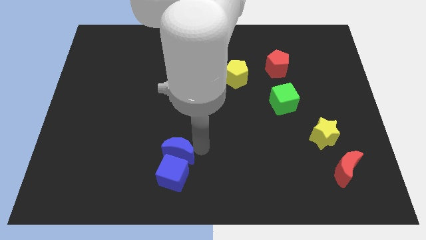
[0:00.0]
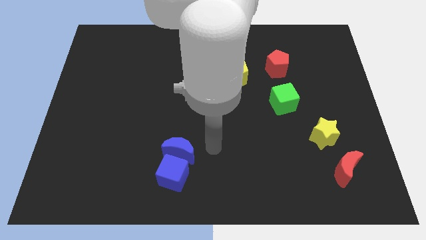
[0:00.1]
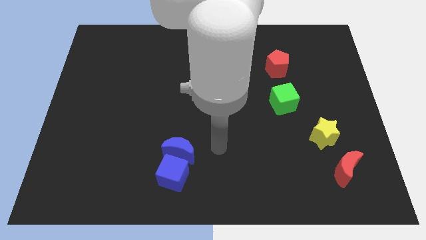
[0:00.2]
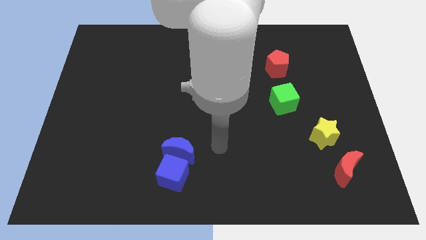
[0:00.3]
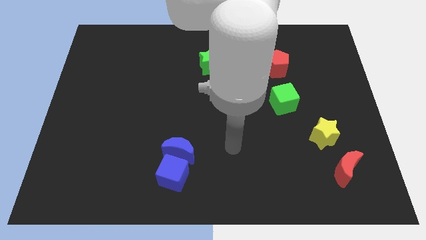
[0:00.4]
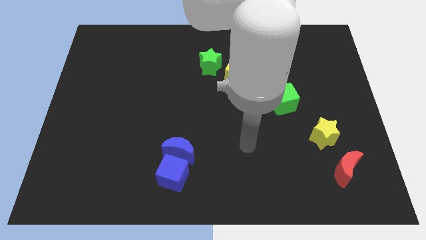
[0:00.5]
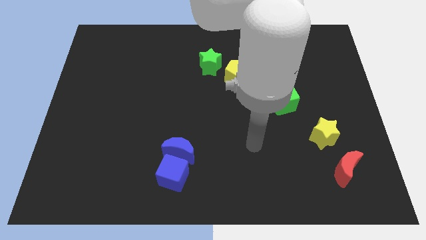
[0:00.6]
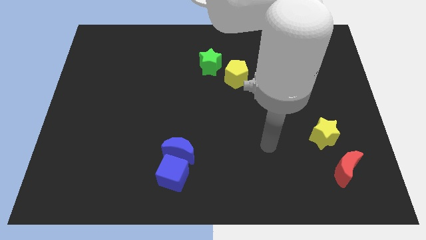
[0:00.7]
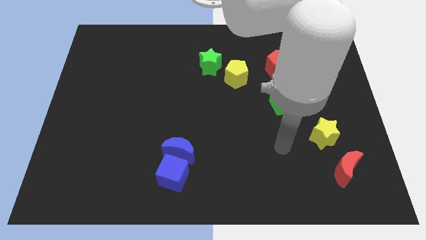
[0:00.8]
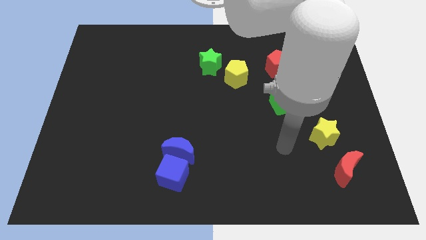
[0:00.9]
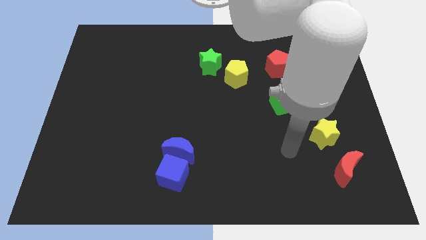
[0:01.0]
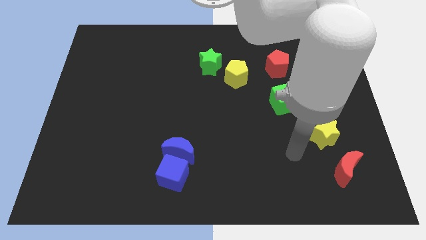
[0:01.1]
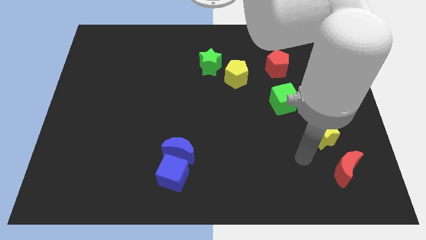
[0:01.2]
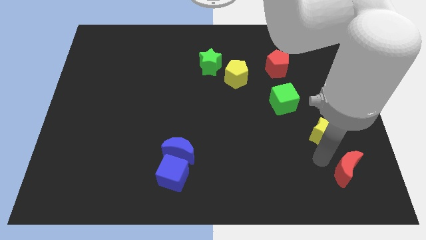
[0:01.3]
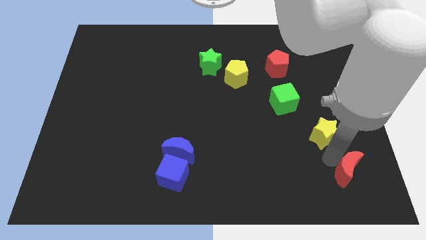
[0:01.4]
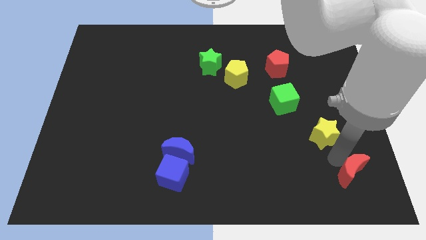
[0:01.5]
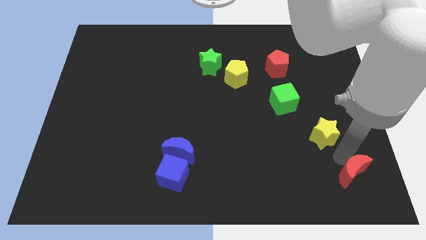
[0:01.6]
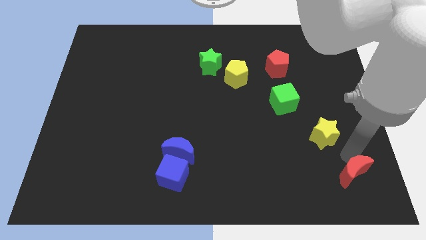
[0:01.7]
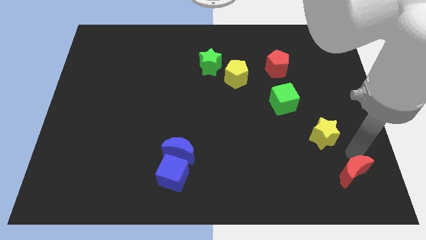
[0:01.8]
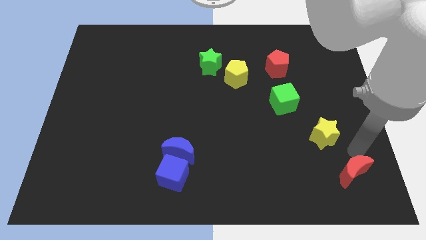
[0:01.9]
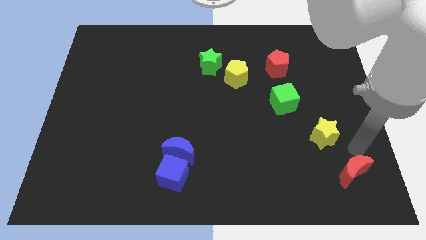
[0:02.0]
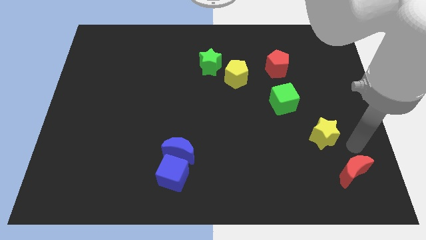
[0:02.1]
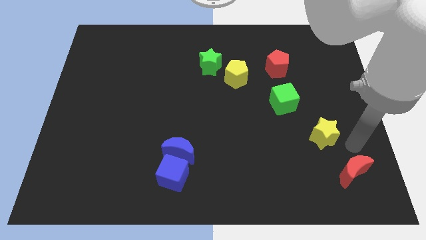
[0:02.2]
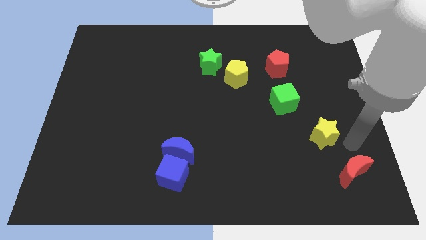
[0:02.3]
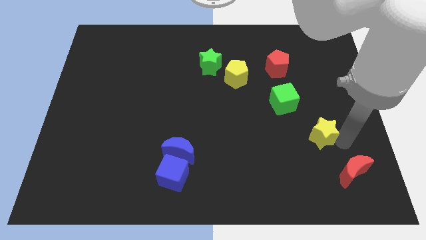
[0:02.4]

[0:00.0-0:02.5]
touch the red crescent at the top

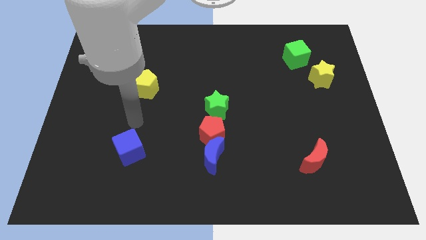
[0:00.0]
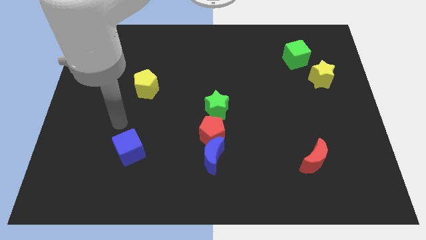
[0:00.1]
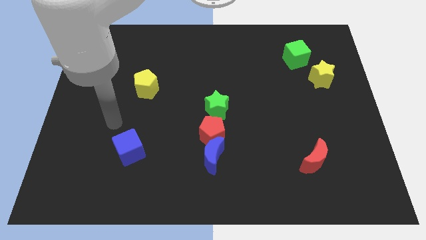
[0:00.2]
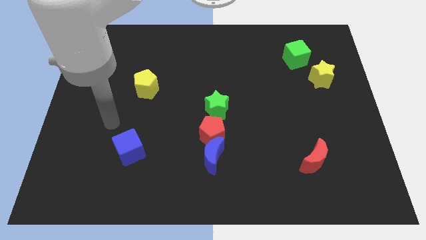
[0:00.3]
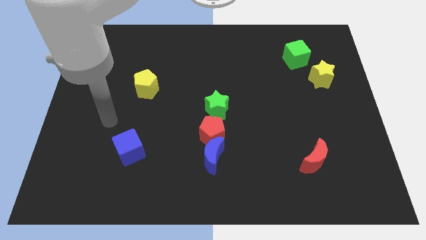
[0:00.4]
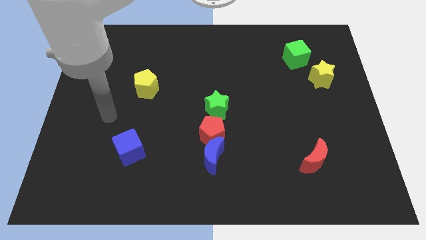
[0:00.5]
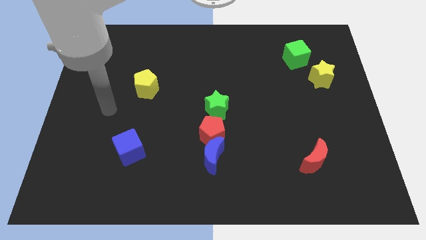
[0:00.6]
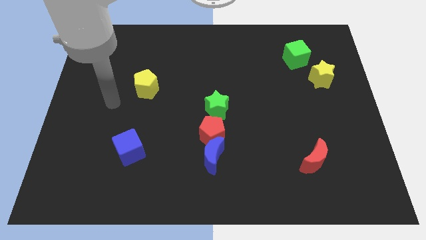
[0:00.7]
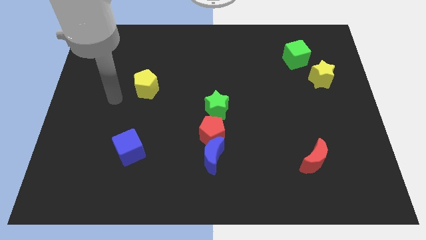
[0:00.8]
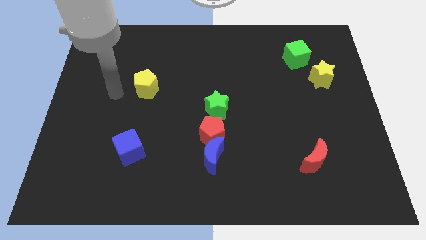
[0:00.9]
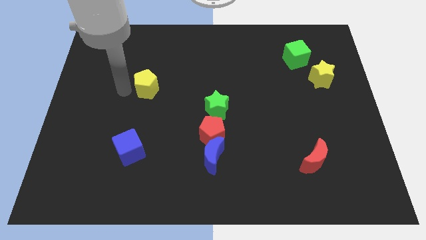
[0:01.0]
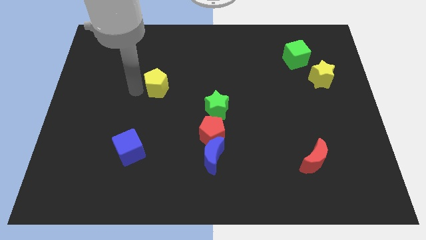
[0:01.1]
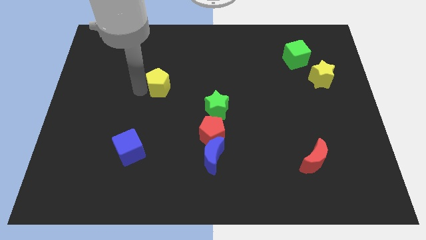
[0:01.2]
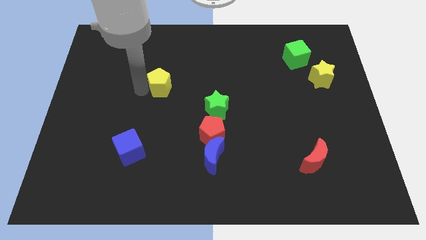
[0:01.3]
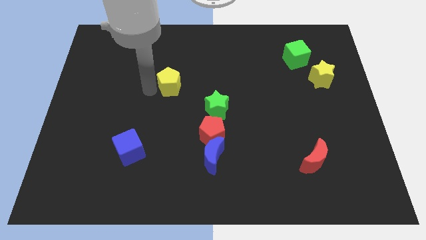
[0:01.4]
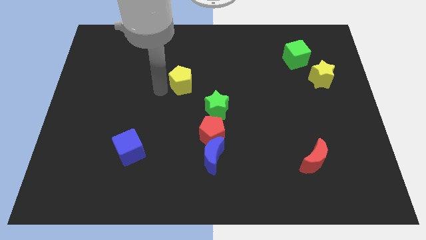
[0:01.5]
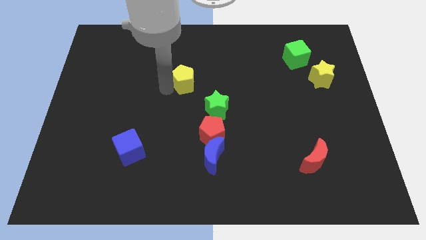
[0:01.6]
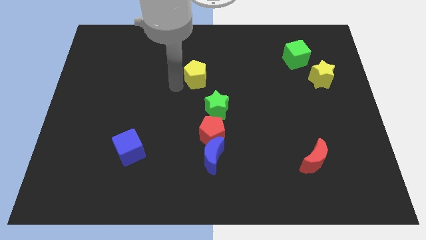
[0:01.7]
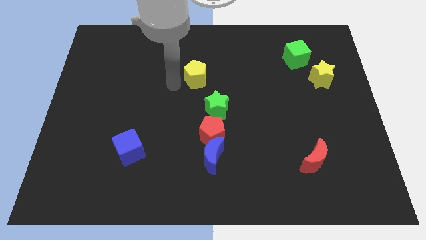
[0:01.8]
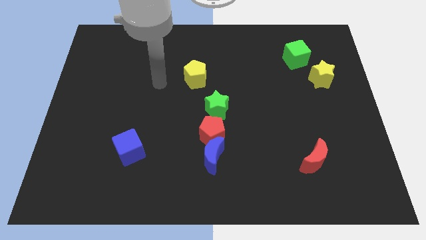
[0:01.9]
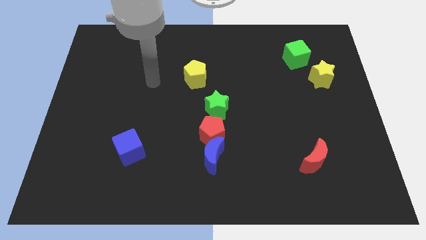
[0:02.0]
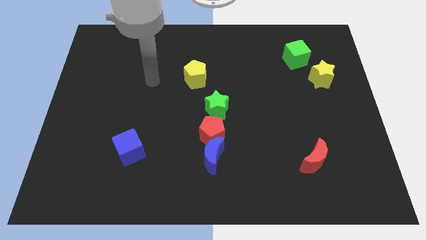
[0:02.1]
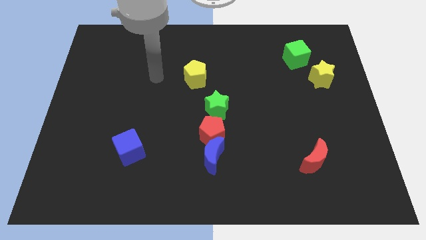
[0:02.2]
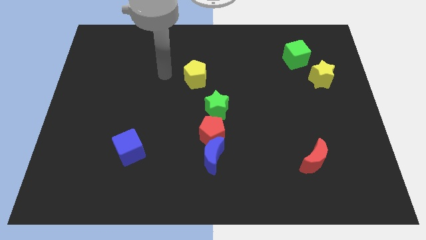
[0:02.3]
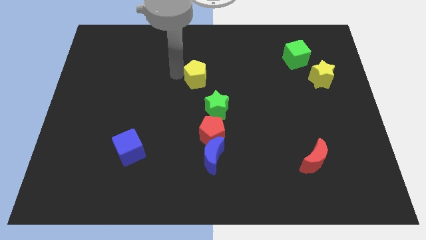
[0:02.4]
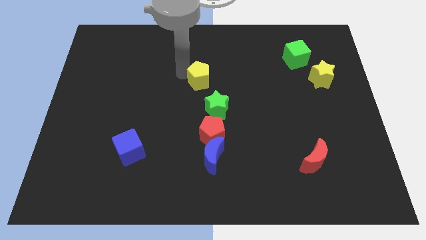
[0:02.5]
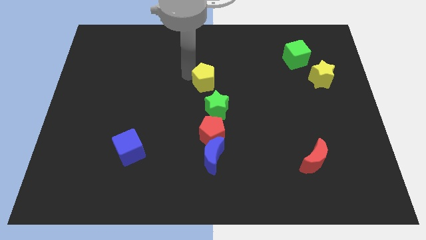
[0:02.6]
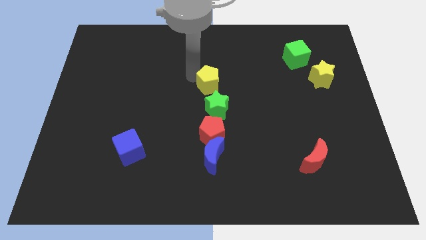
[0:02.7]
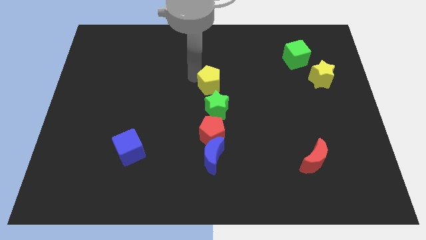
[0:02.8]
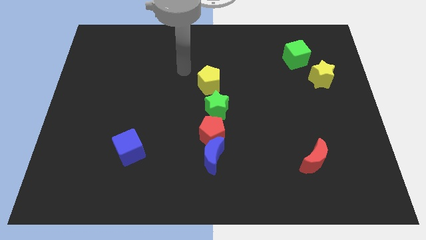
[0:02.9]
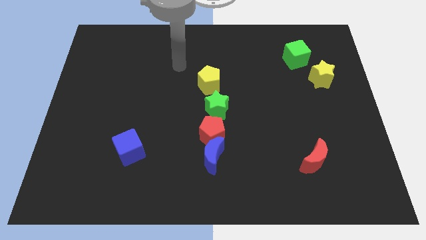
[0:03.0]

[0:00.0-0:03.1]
move yellow pentagon to center

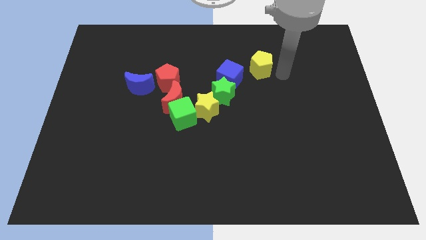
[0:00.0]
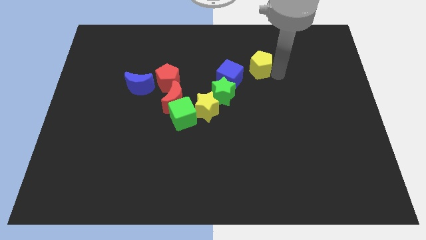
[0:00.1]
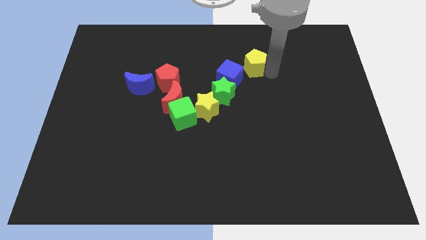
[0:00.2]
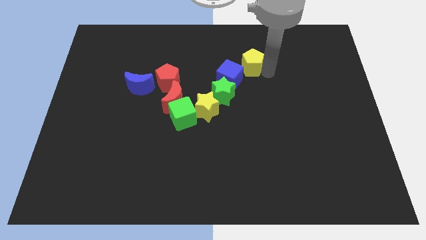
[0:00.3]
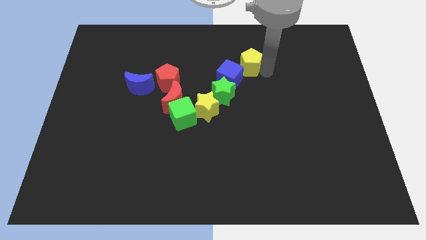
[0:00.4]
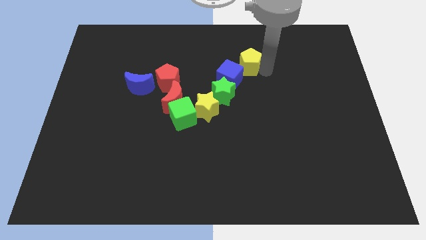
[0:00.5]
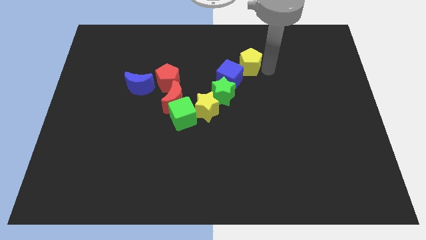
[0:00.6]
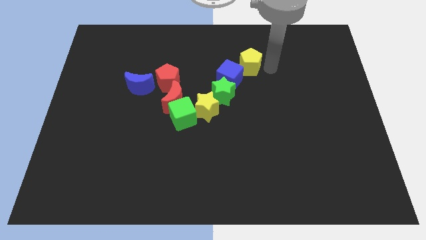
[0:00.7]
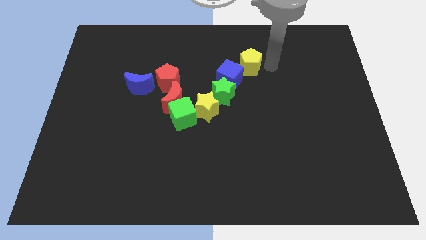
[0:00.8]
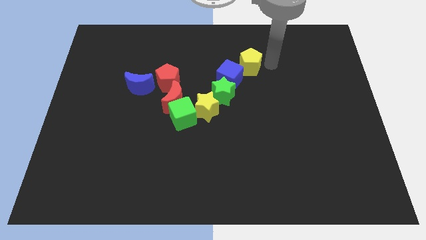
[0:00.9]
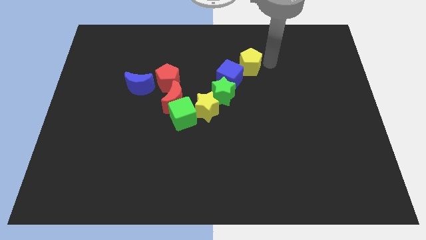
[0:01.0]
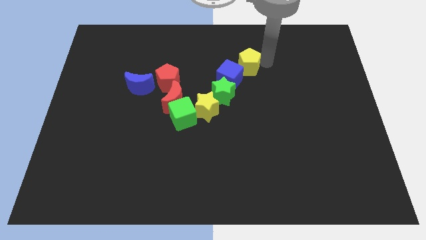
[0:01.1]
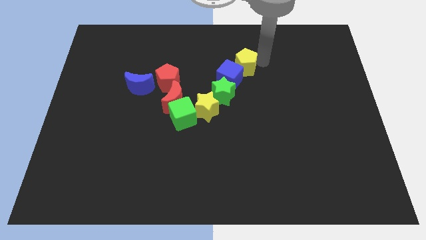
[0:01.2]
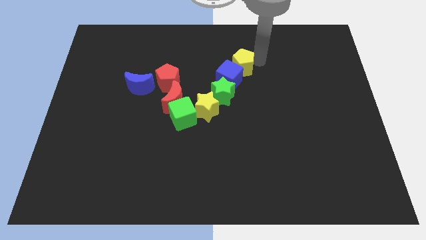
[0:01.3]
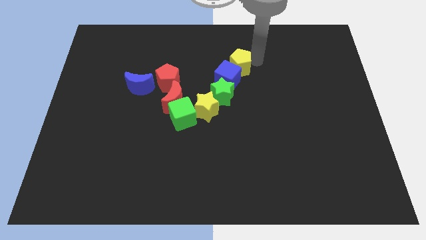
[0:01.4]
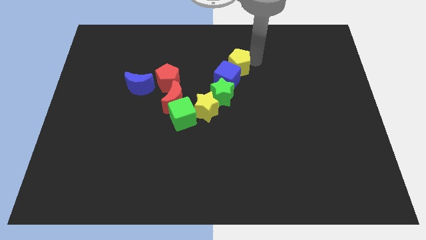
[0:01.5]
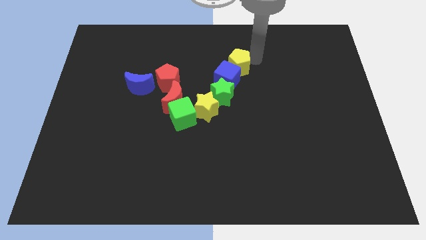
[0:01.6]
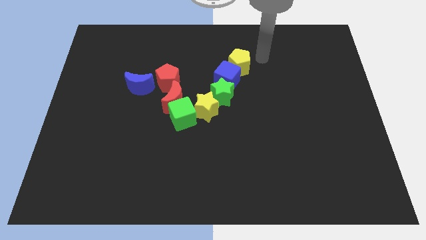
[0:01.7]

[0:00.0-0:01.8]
move the yellow pentagon above the blue cube

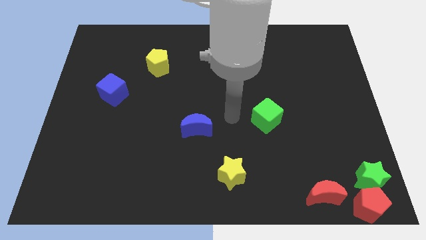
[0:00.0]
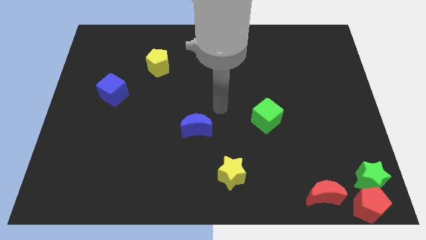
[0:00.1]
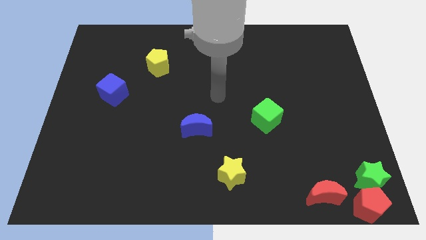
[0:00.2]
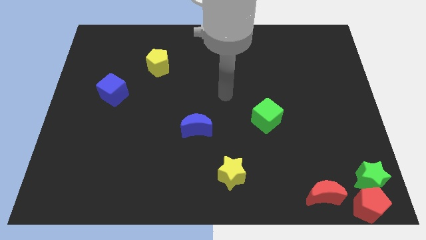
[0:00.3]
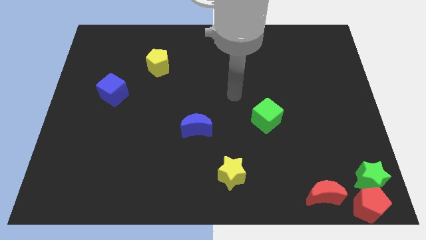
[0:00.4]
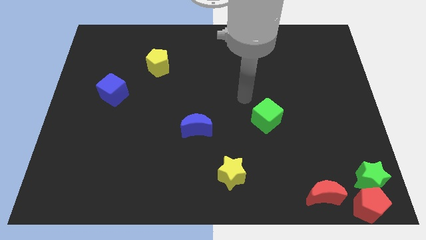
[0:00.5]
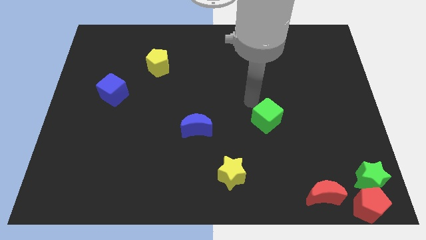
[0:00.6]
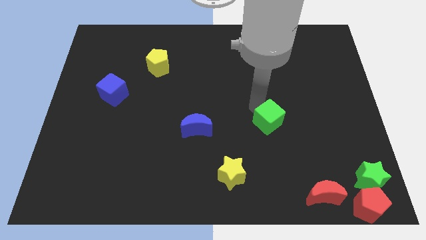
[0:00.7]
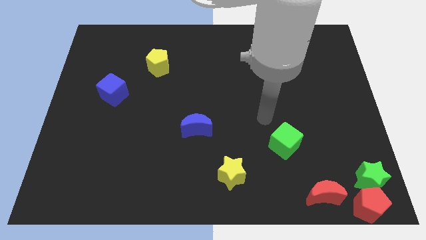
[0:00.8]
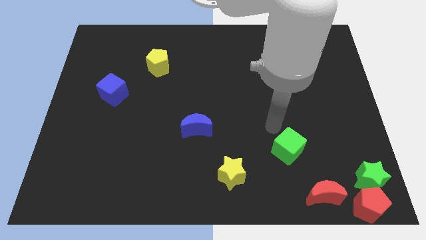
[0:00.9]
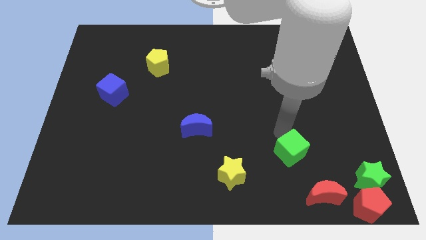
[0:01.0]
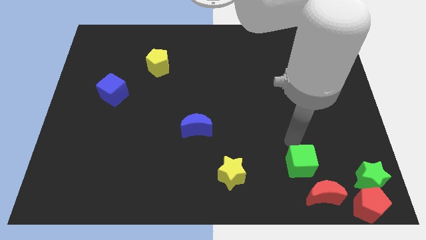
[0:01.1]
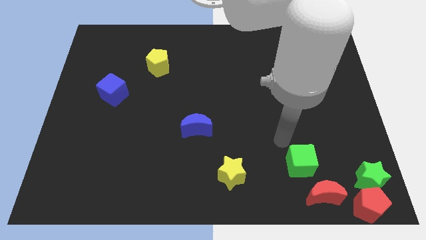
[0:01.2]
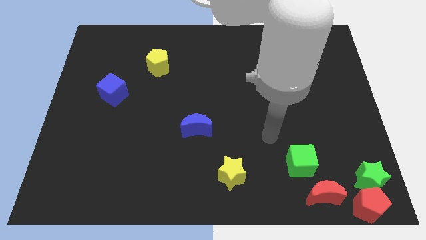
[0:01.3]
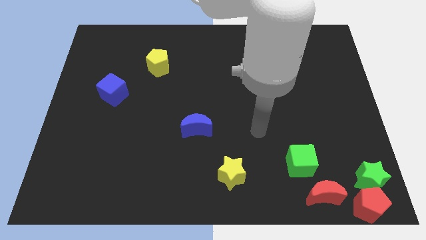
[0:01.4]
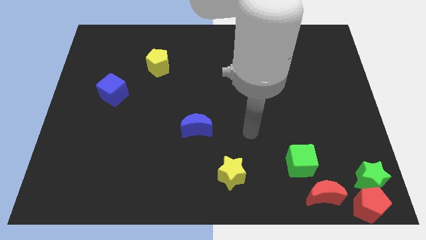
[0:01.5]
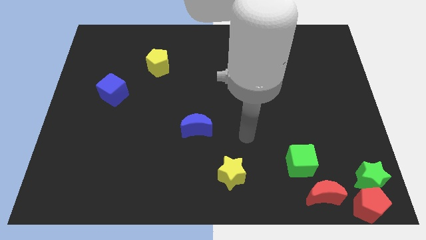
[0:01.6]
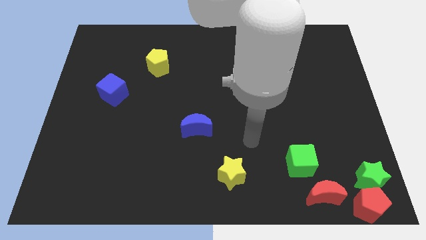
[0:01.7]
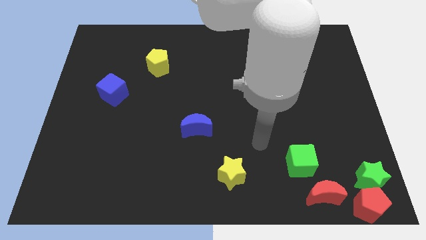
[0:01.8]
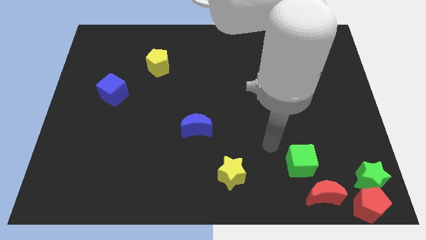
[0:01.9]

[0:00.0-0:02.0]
move green cube towards the red crescent
